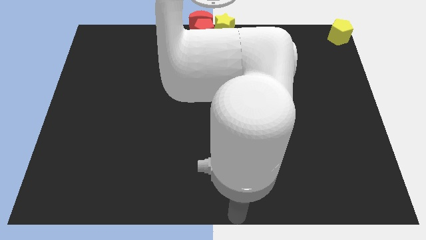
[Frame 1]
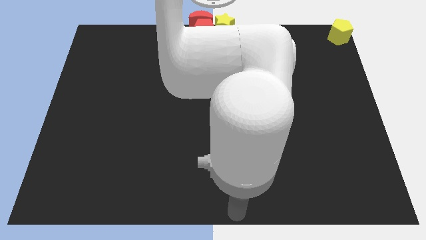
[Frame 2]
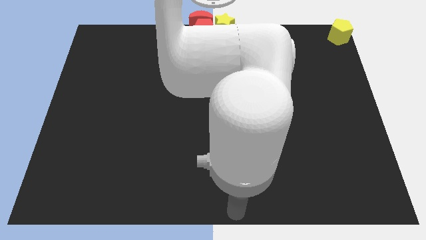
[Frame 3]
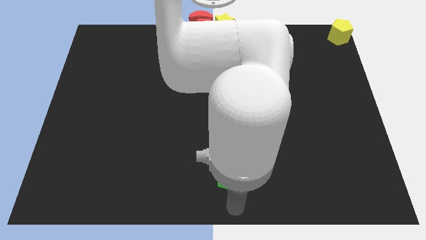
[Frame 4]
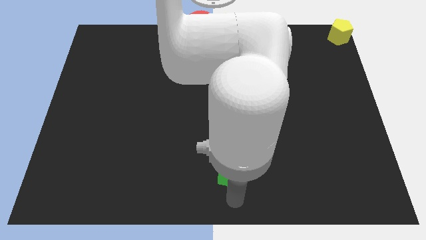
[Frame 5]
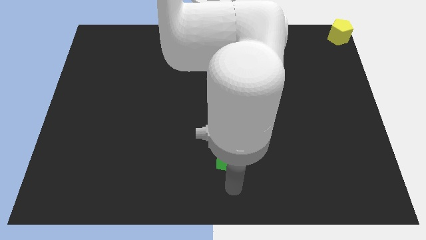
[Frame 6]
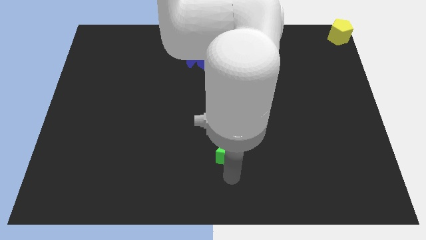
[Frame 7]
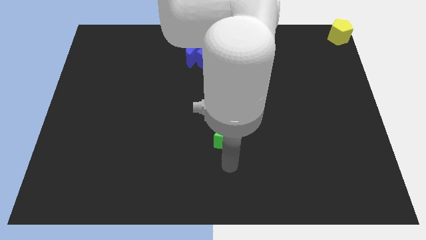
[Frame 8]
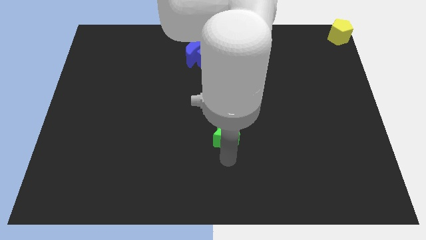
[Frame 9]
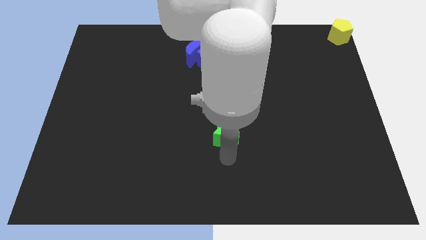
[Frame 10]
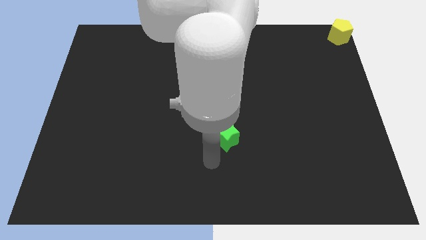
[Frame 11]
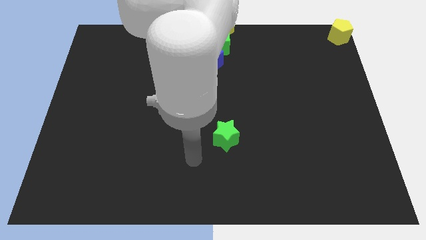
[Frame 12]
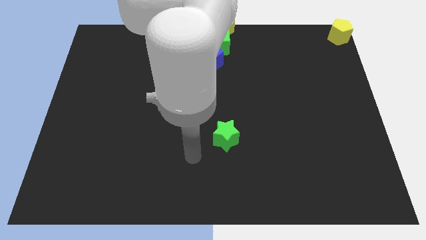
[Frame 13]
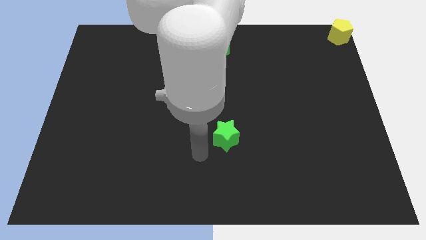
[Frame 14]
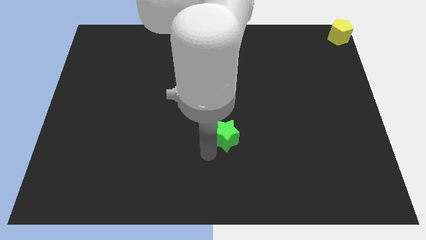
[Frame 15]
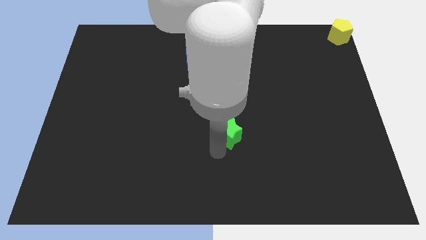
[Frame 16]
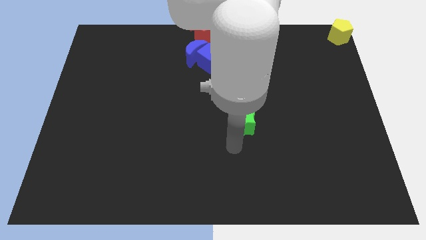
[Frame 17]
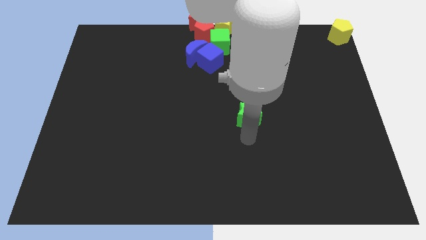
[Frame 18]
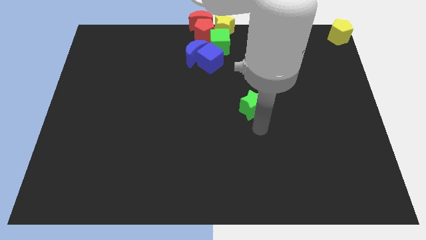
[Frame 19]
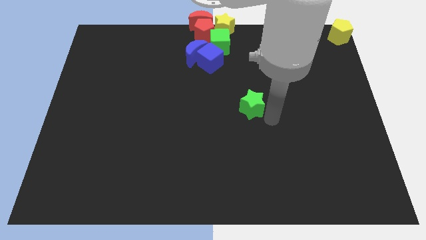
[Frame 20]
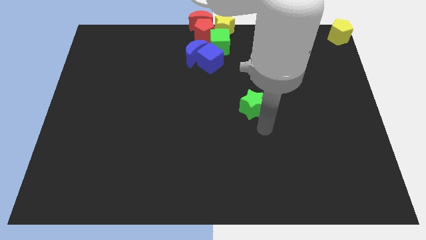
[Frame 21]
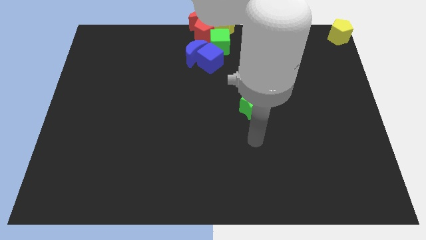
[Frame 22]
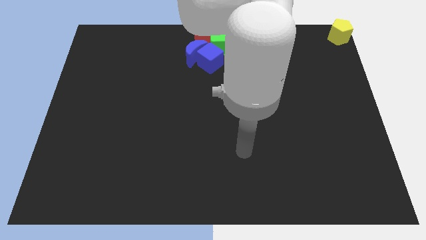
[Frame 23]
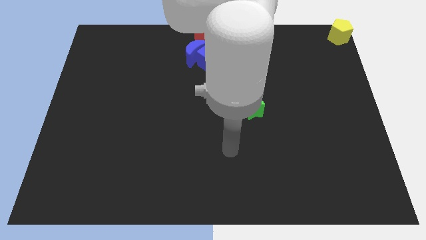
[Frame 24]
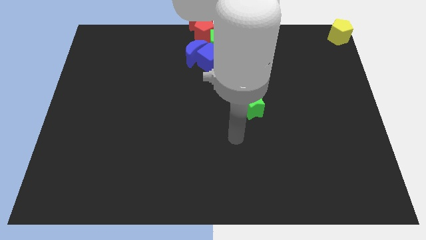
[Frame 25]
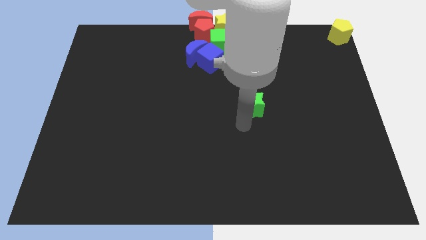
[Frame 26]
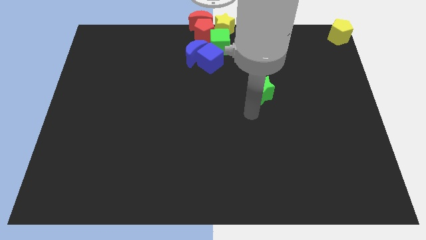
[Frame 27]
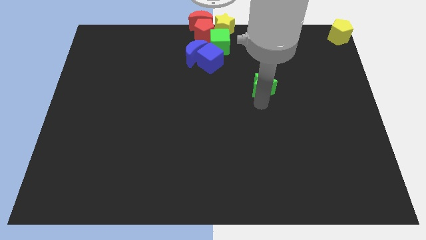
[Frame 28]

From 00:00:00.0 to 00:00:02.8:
place the green star diagonally below green cube

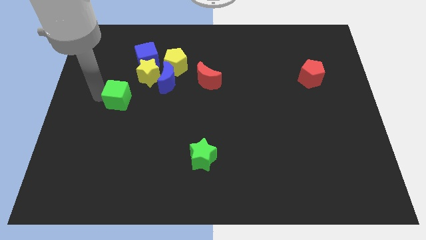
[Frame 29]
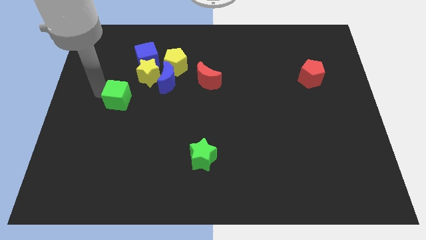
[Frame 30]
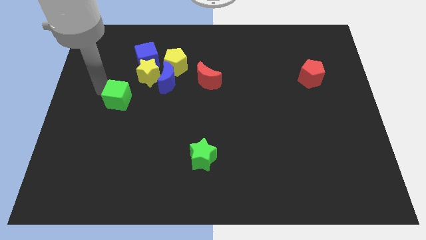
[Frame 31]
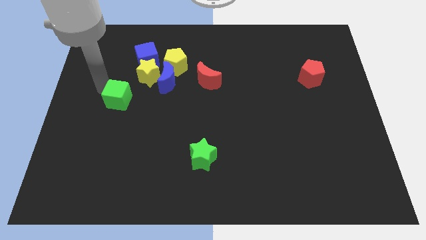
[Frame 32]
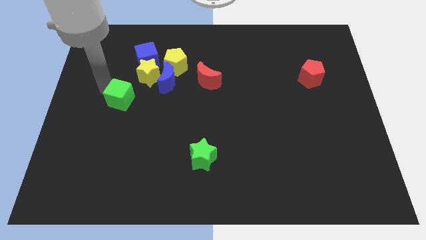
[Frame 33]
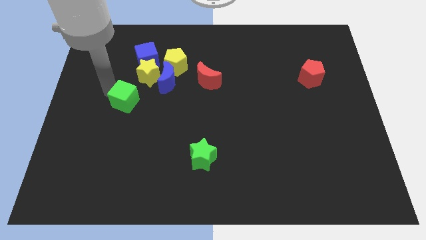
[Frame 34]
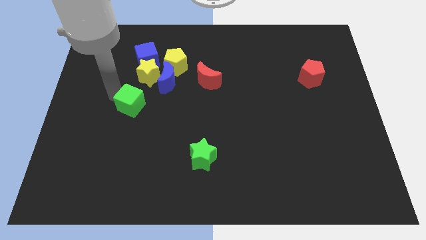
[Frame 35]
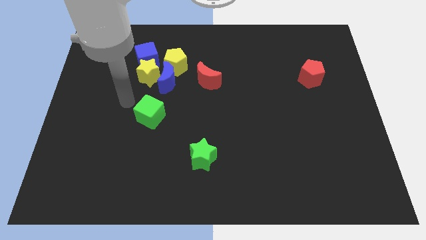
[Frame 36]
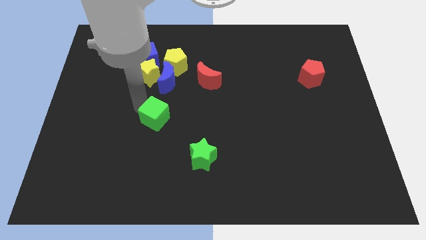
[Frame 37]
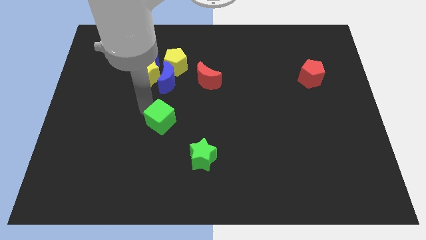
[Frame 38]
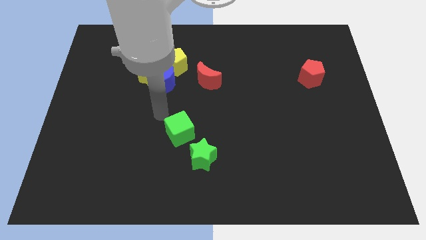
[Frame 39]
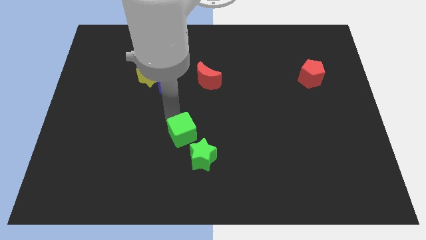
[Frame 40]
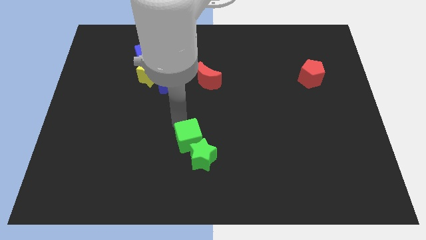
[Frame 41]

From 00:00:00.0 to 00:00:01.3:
place the green cube close to the green star

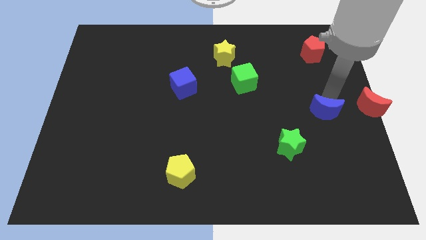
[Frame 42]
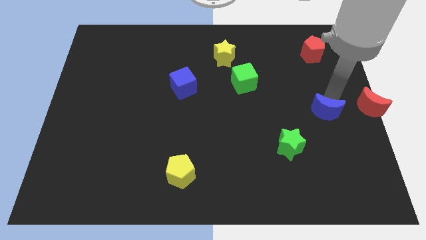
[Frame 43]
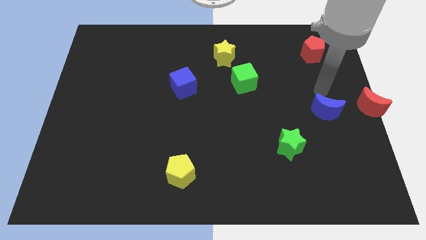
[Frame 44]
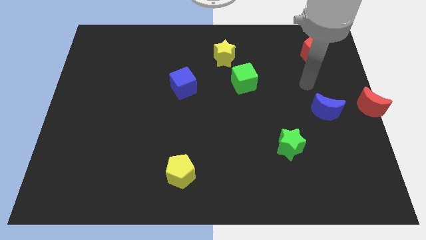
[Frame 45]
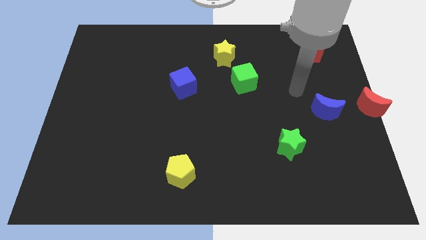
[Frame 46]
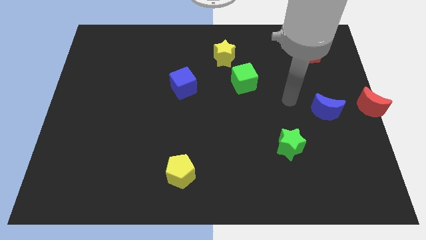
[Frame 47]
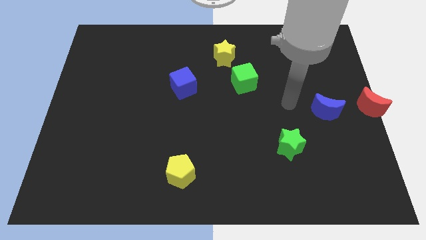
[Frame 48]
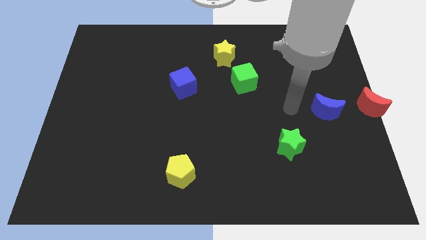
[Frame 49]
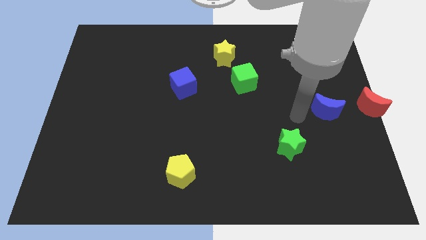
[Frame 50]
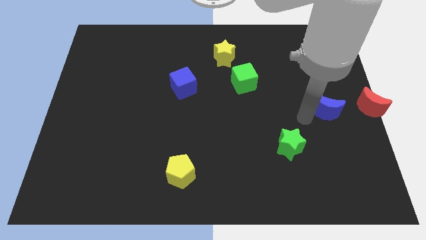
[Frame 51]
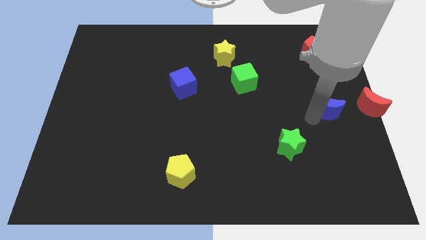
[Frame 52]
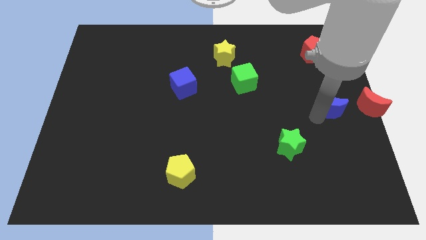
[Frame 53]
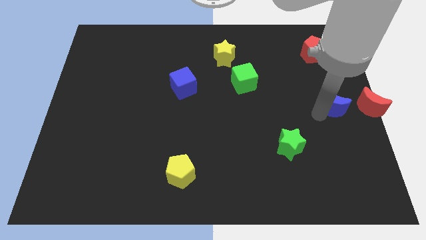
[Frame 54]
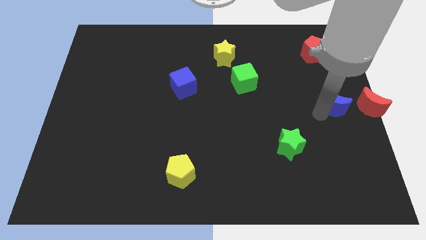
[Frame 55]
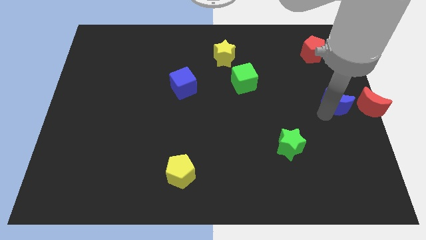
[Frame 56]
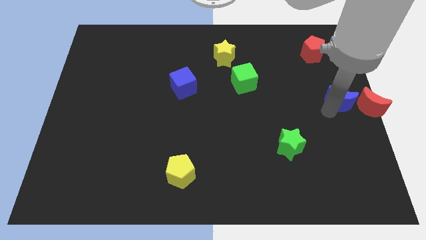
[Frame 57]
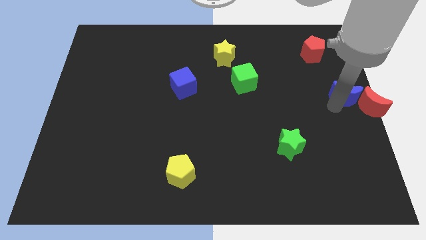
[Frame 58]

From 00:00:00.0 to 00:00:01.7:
put blue moon and red moon together

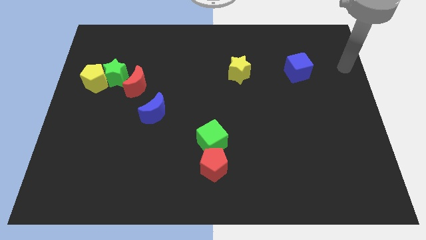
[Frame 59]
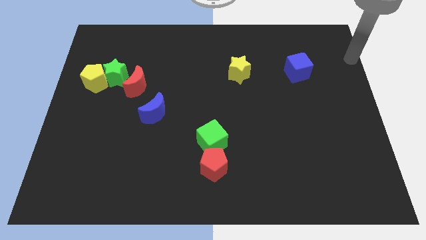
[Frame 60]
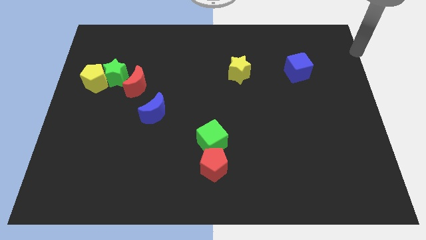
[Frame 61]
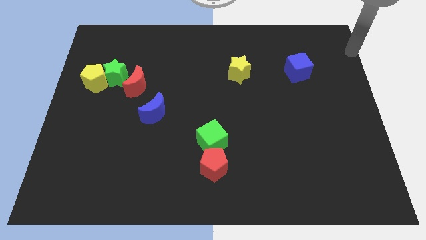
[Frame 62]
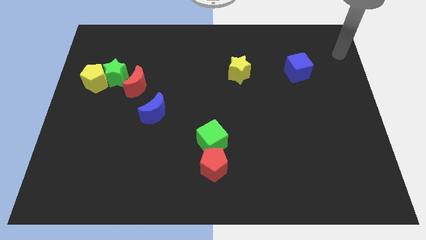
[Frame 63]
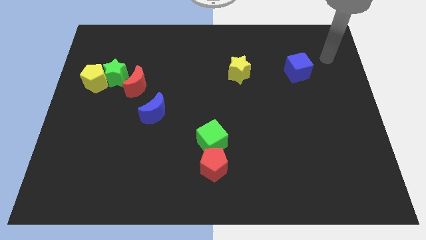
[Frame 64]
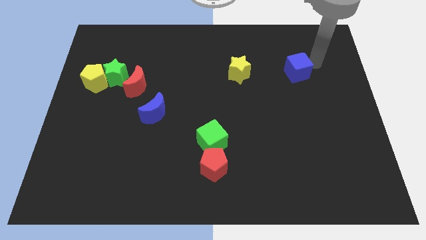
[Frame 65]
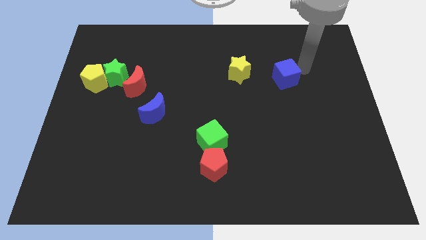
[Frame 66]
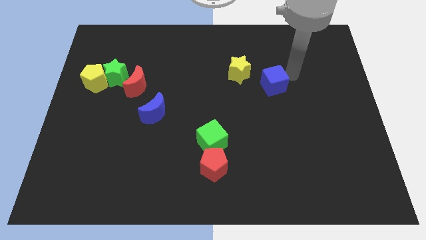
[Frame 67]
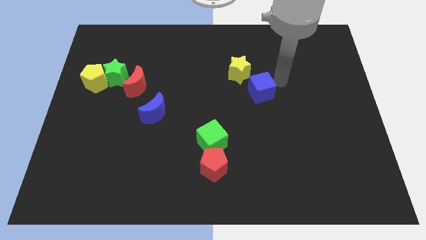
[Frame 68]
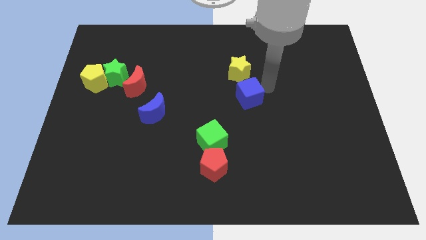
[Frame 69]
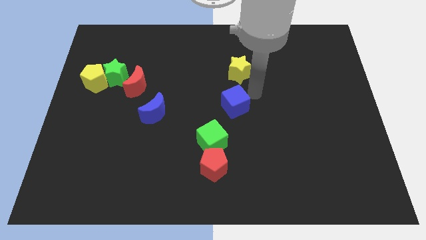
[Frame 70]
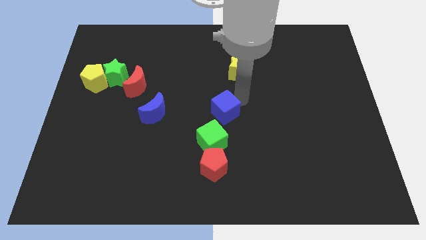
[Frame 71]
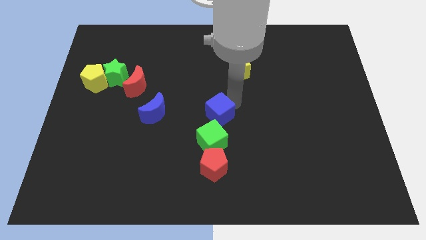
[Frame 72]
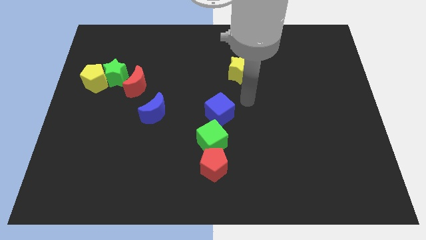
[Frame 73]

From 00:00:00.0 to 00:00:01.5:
push the blue cube to the top of the green cube

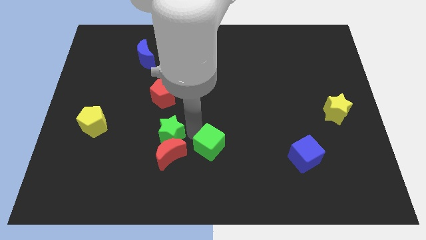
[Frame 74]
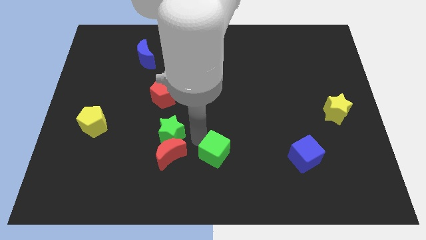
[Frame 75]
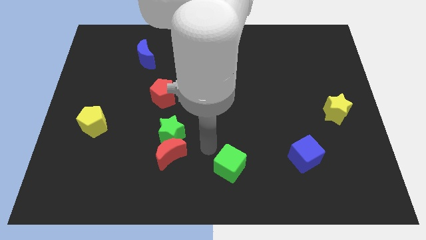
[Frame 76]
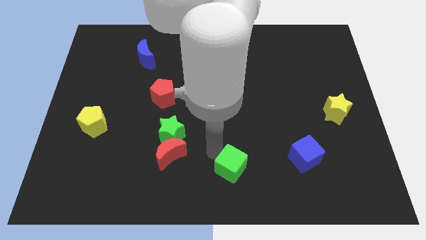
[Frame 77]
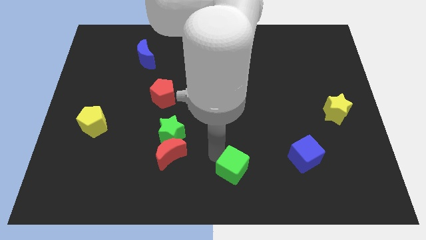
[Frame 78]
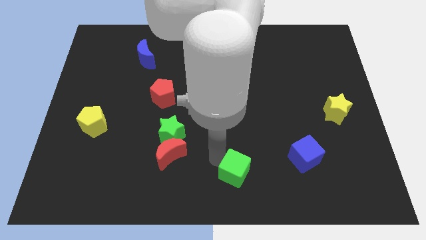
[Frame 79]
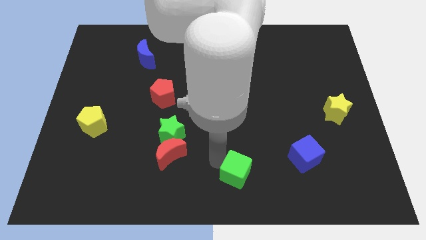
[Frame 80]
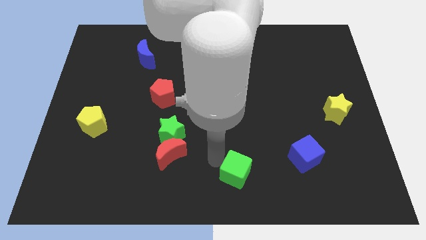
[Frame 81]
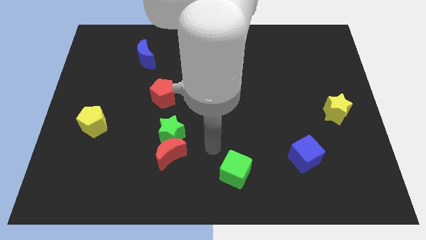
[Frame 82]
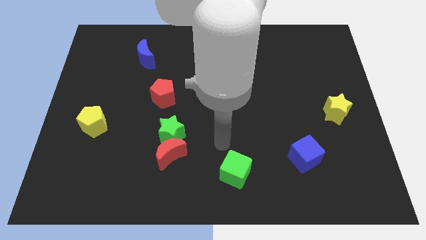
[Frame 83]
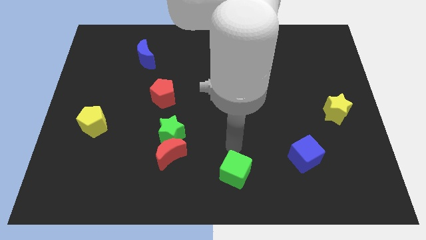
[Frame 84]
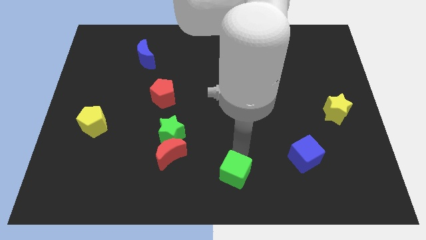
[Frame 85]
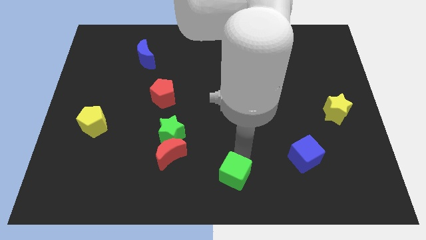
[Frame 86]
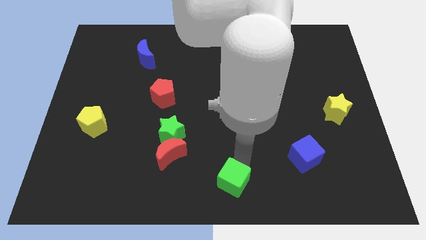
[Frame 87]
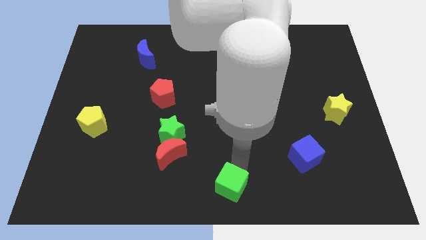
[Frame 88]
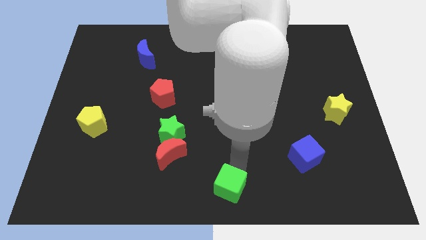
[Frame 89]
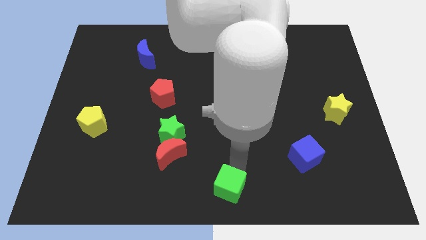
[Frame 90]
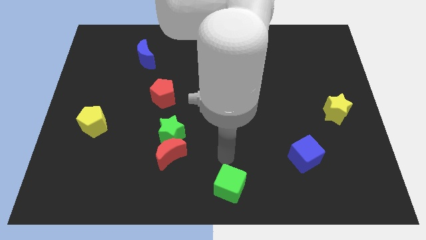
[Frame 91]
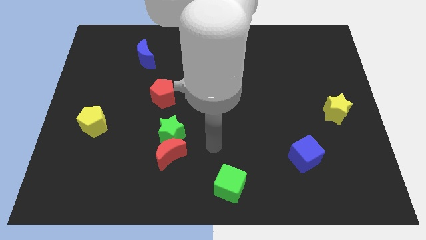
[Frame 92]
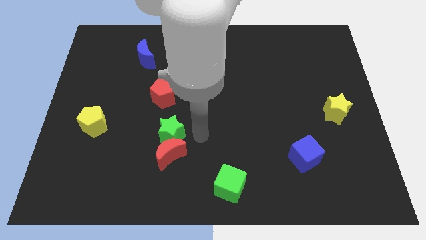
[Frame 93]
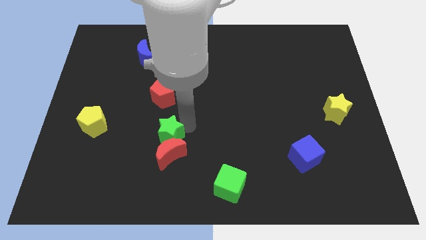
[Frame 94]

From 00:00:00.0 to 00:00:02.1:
push the green cube towards the bottom center
